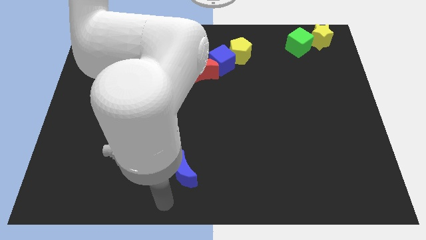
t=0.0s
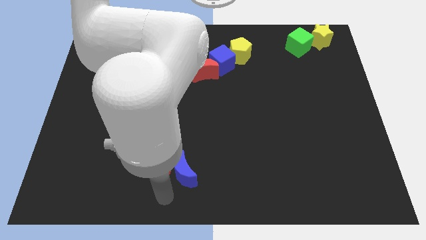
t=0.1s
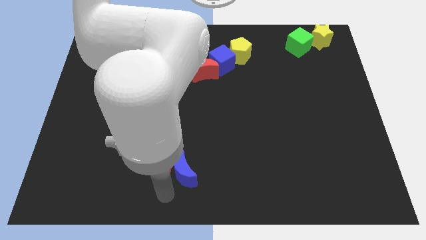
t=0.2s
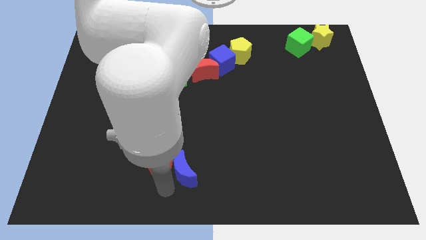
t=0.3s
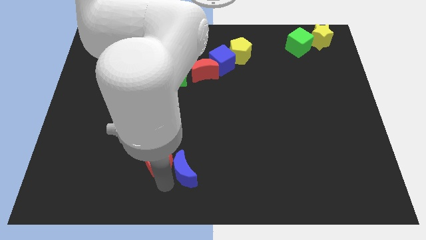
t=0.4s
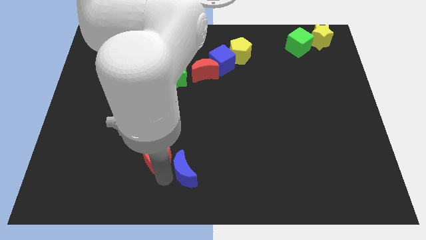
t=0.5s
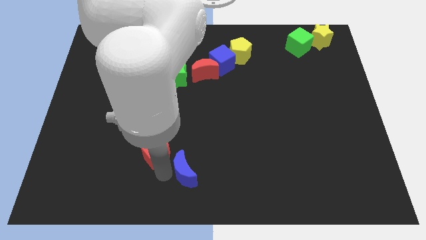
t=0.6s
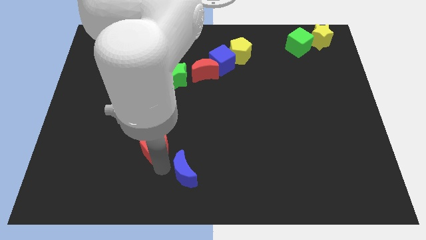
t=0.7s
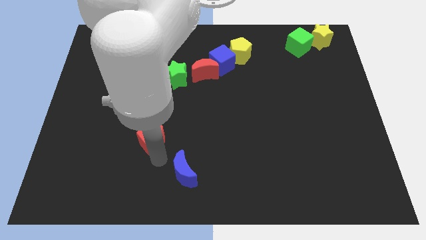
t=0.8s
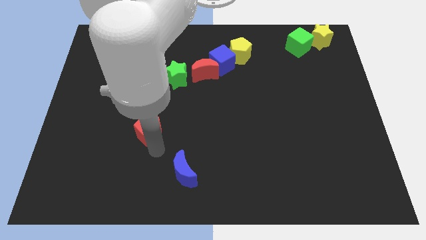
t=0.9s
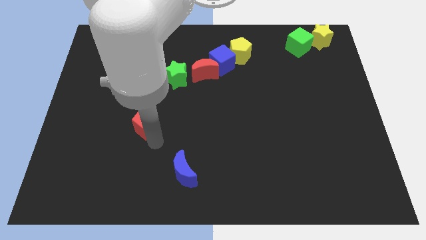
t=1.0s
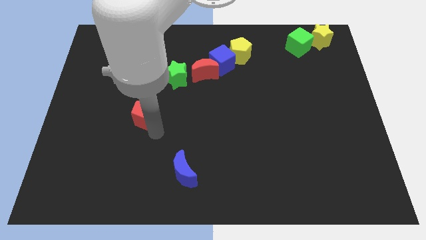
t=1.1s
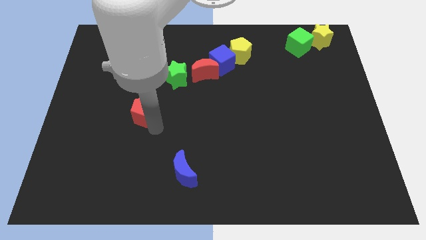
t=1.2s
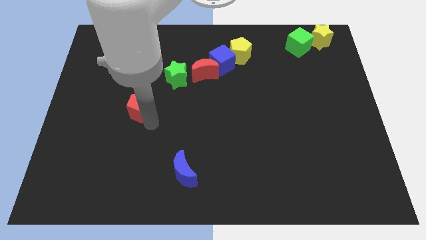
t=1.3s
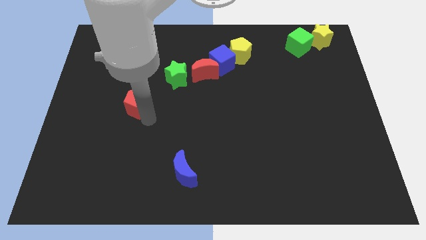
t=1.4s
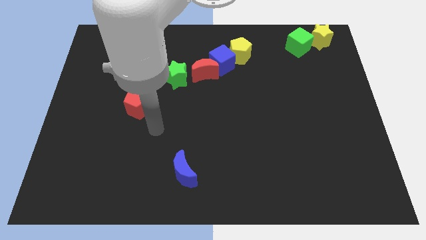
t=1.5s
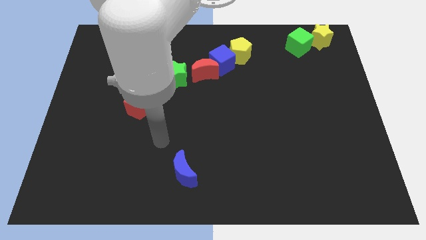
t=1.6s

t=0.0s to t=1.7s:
separate the red pentagon towards the center left

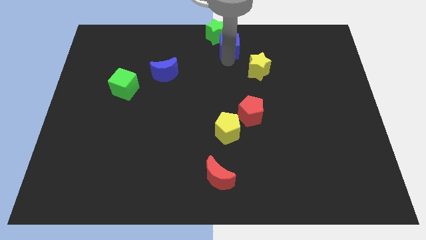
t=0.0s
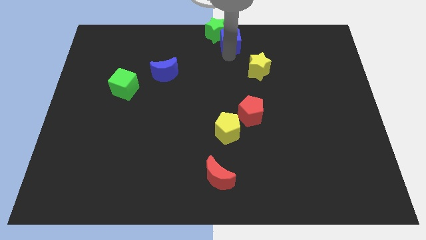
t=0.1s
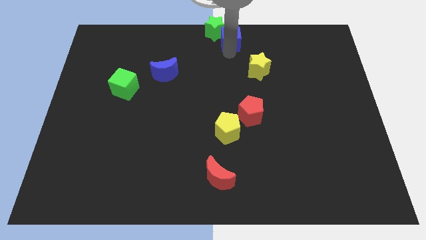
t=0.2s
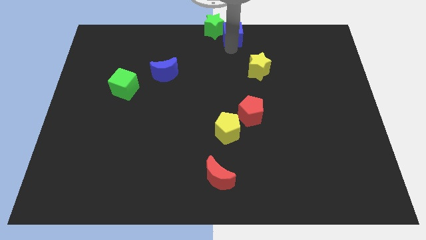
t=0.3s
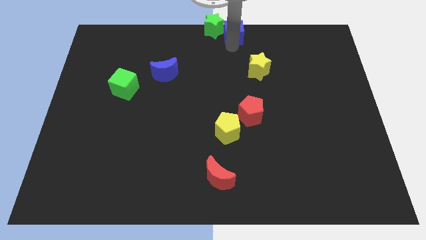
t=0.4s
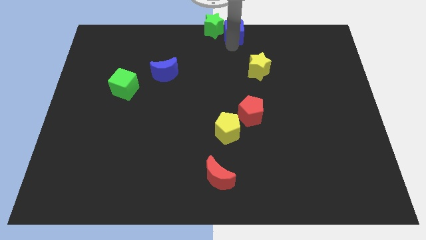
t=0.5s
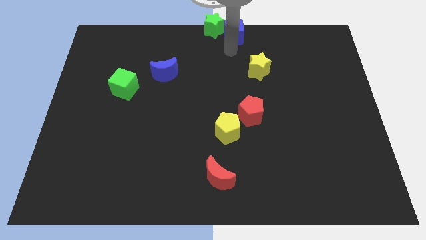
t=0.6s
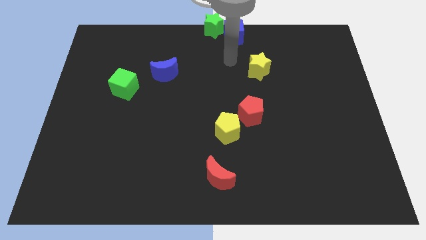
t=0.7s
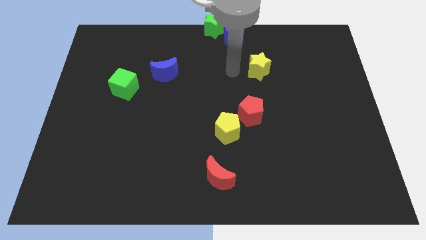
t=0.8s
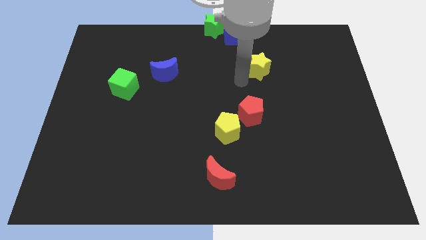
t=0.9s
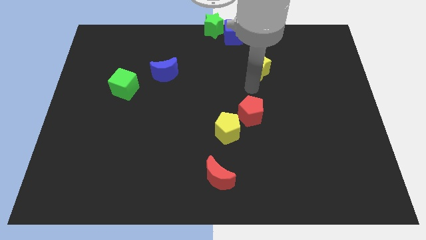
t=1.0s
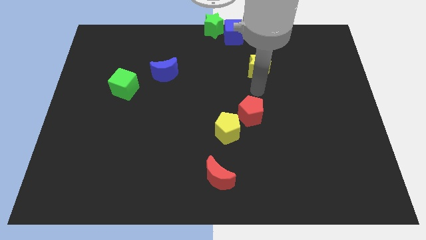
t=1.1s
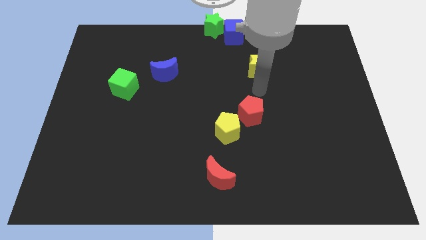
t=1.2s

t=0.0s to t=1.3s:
move the blue cube to the left of the green star

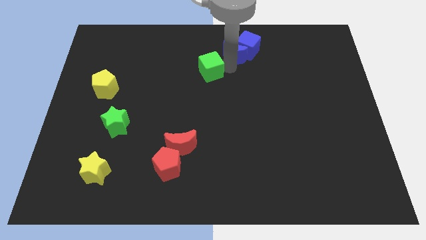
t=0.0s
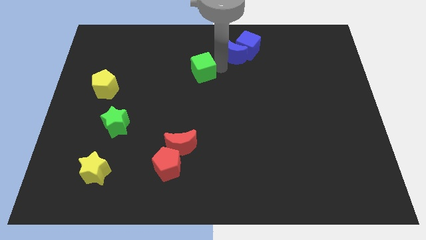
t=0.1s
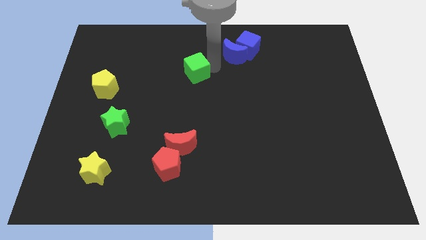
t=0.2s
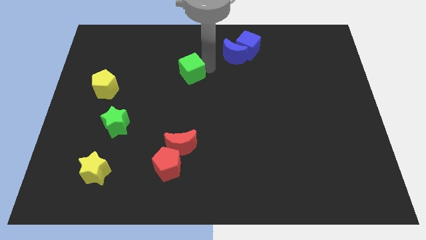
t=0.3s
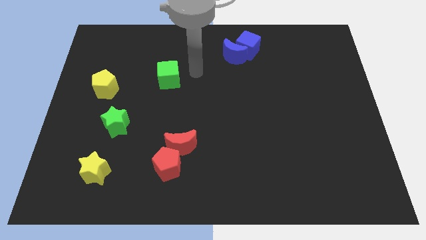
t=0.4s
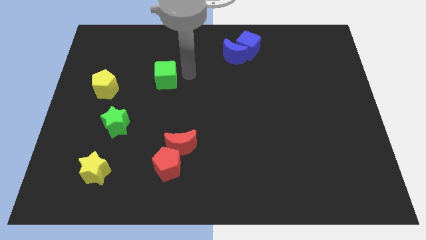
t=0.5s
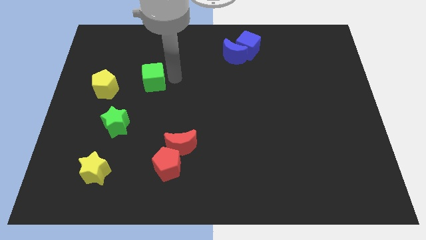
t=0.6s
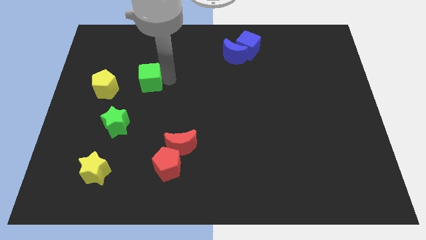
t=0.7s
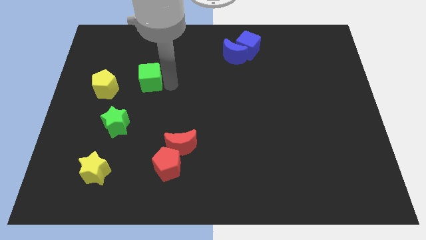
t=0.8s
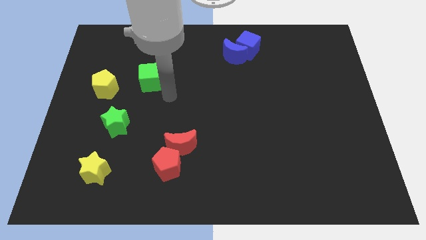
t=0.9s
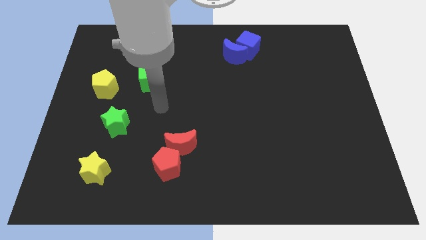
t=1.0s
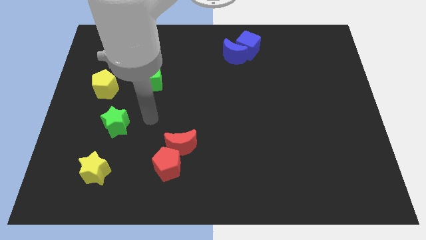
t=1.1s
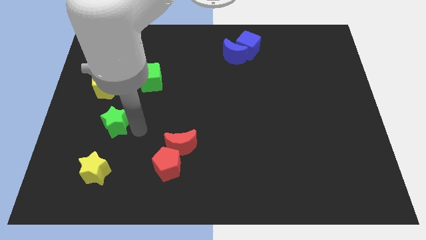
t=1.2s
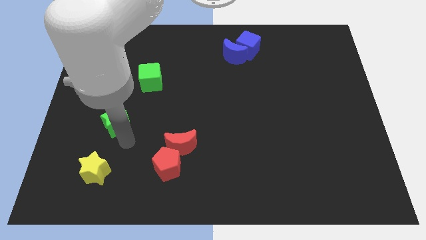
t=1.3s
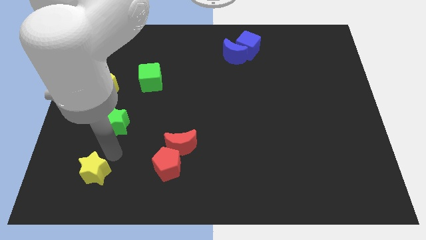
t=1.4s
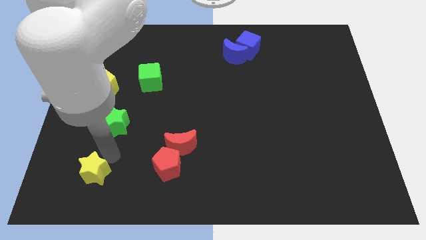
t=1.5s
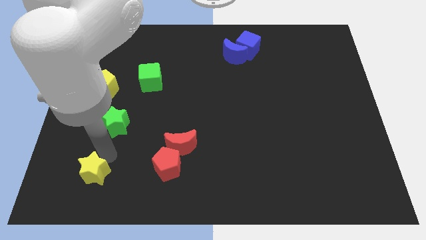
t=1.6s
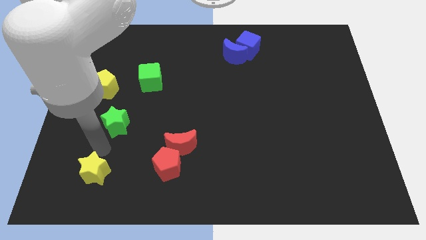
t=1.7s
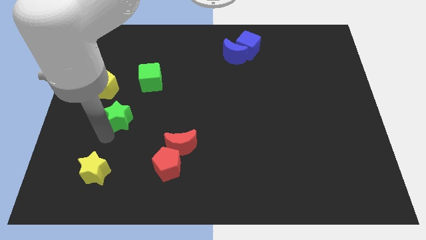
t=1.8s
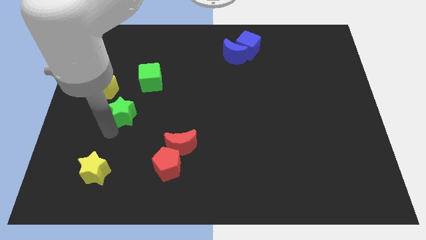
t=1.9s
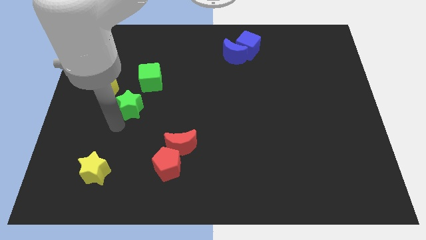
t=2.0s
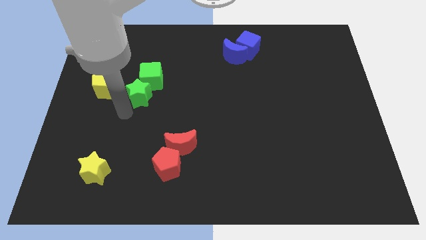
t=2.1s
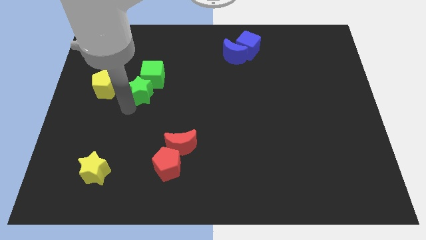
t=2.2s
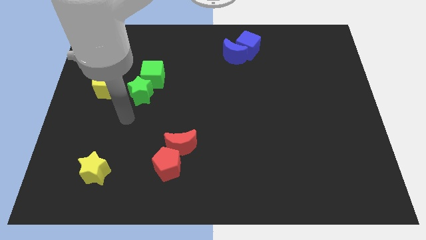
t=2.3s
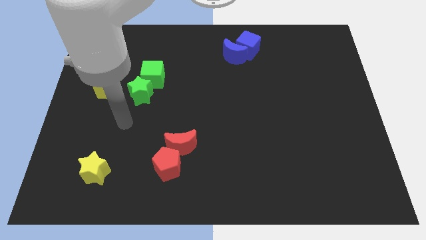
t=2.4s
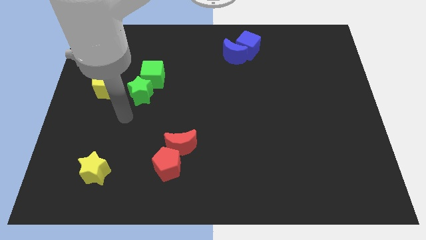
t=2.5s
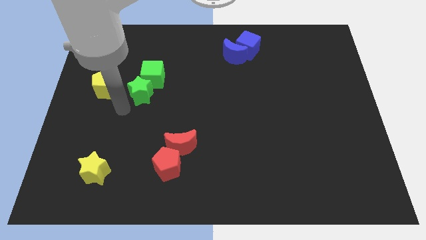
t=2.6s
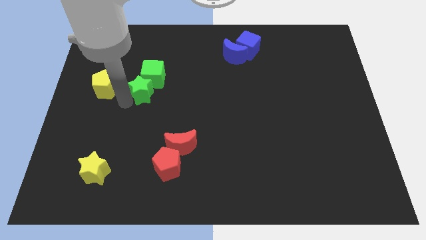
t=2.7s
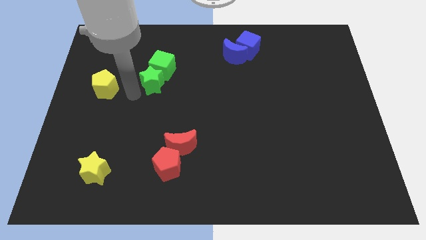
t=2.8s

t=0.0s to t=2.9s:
place the green star right to the yellow pentagon

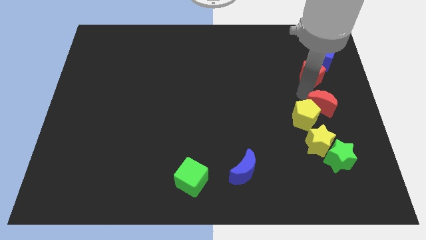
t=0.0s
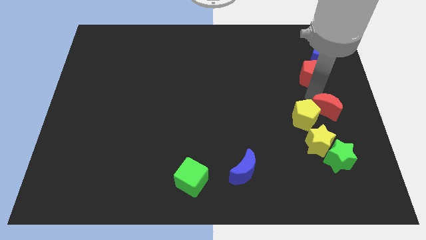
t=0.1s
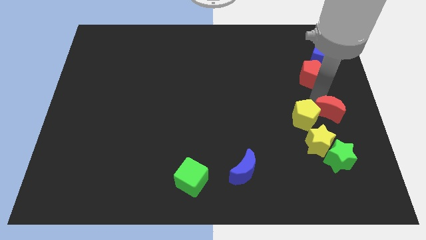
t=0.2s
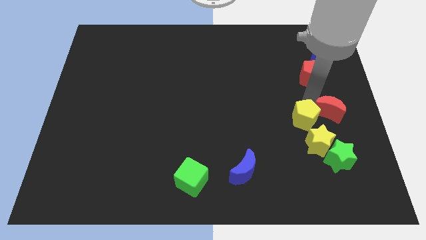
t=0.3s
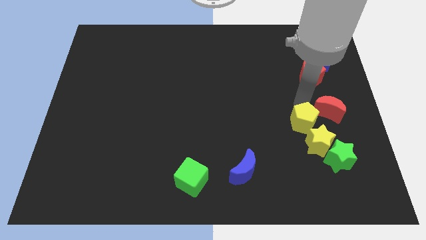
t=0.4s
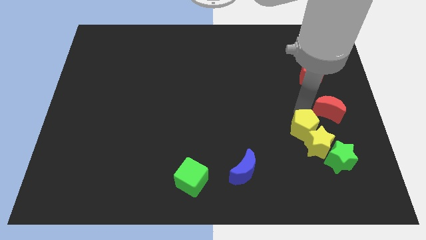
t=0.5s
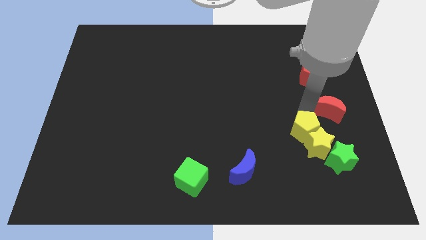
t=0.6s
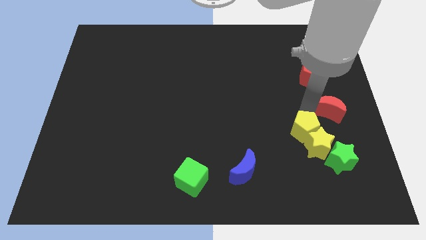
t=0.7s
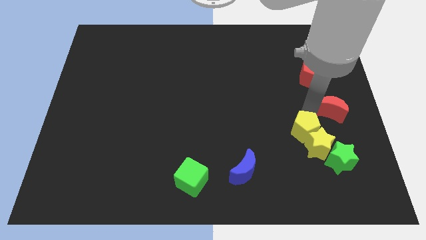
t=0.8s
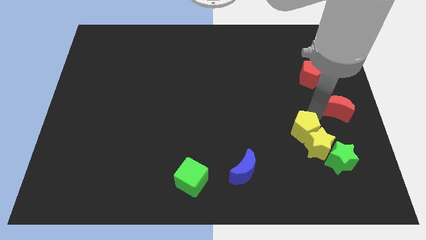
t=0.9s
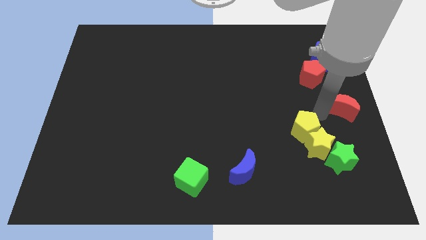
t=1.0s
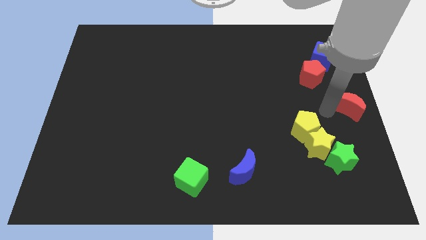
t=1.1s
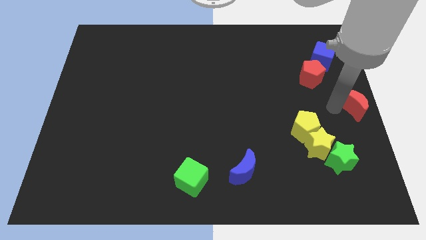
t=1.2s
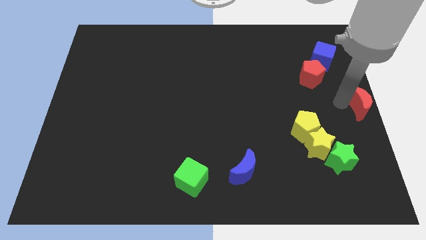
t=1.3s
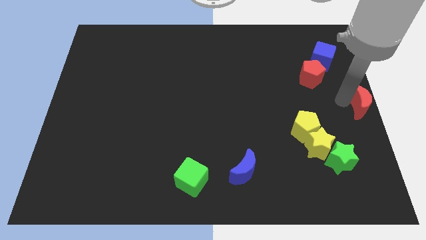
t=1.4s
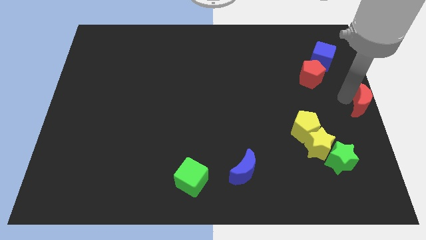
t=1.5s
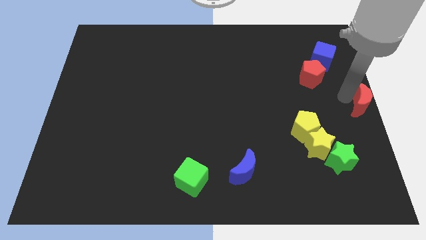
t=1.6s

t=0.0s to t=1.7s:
place the red moon to the middle left of the board

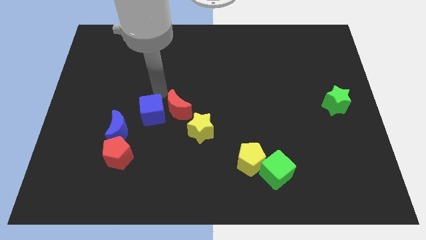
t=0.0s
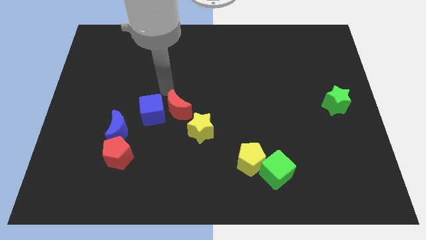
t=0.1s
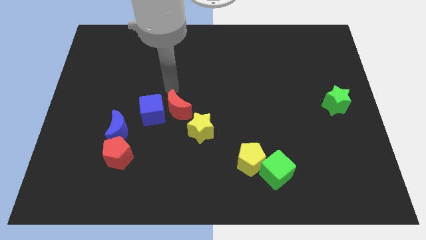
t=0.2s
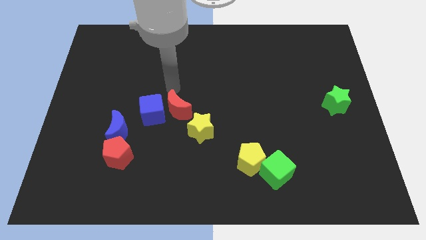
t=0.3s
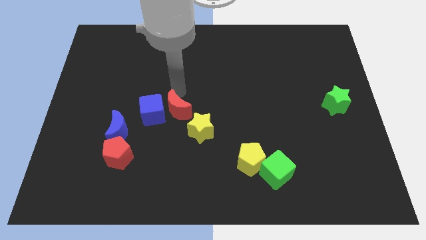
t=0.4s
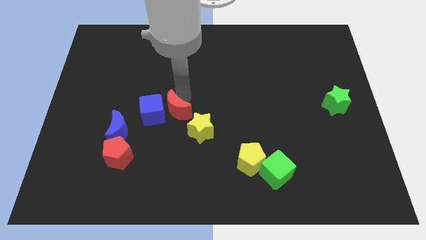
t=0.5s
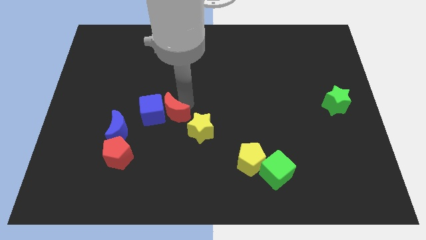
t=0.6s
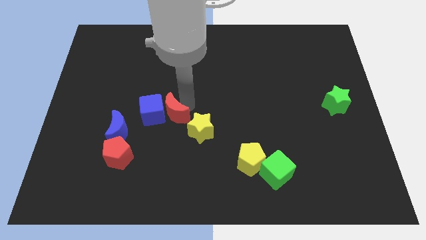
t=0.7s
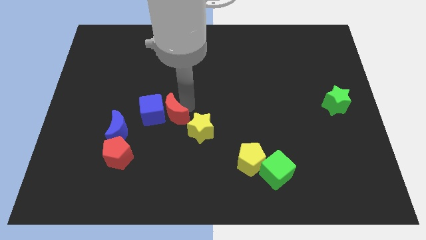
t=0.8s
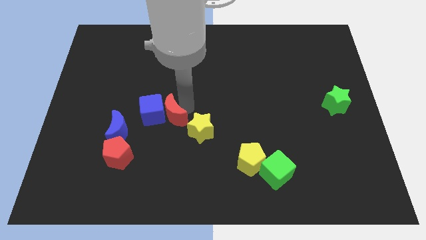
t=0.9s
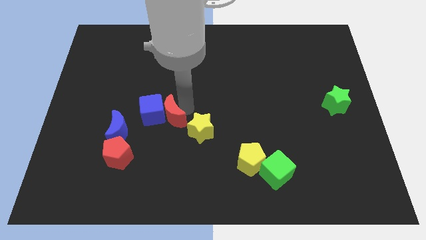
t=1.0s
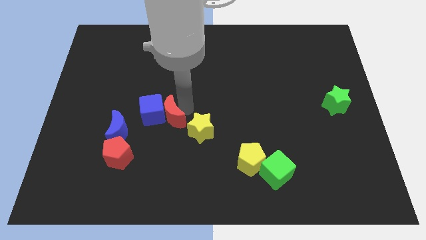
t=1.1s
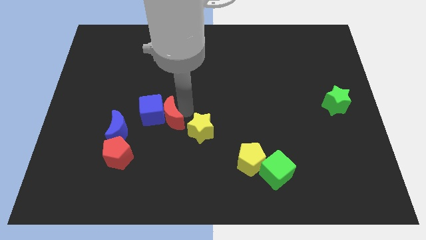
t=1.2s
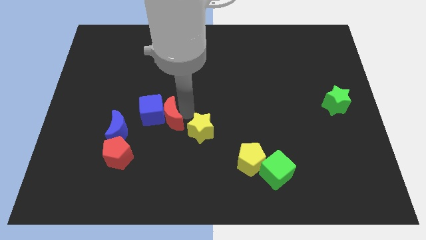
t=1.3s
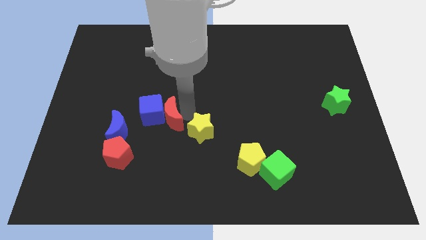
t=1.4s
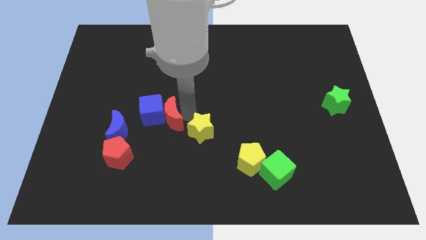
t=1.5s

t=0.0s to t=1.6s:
push the red crescent close to the blue cube
